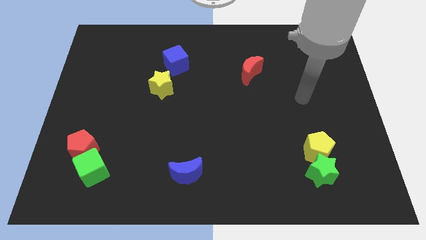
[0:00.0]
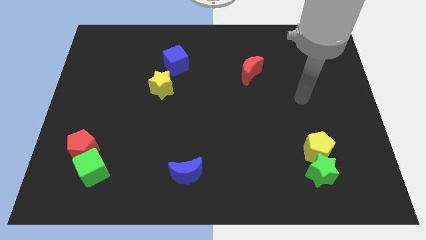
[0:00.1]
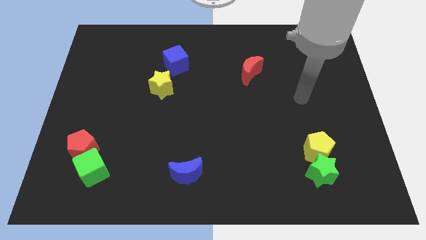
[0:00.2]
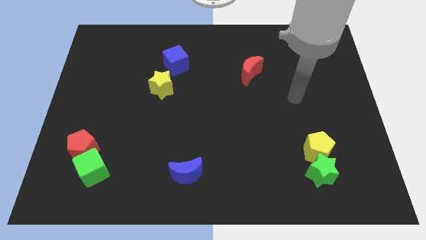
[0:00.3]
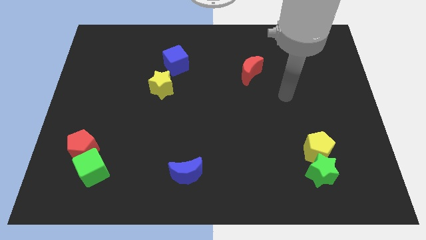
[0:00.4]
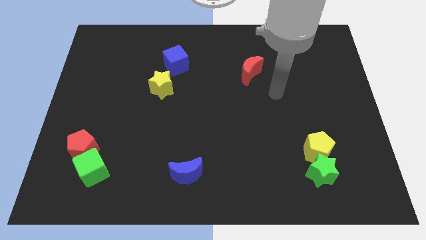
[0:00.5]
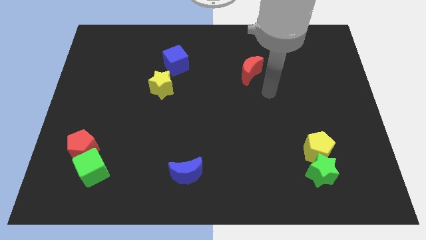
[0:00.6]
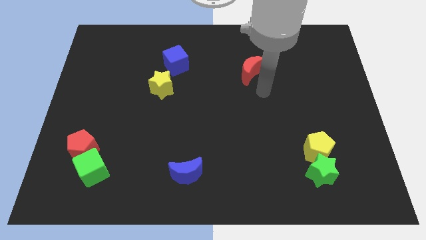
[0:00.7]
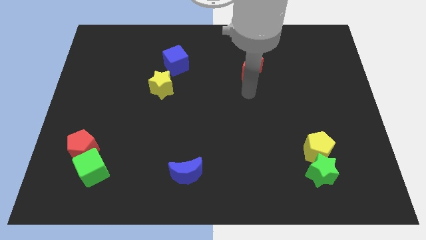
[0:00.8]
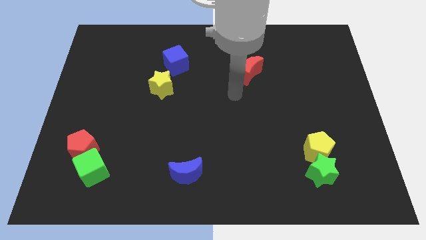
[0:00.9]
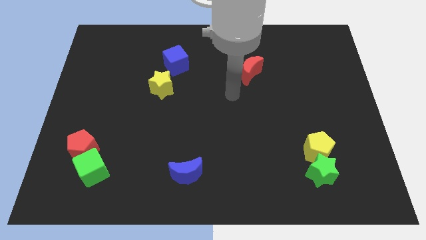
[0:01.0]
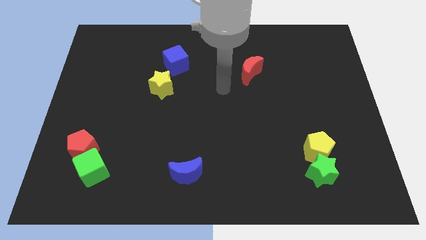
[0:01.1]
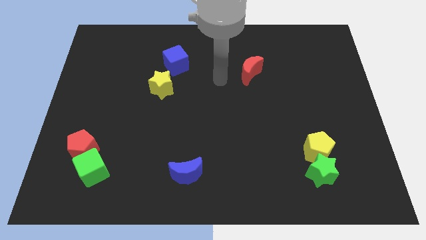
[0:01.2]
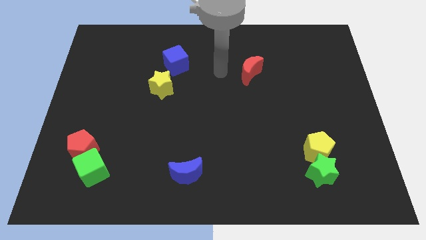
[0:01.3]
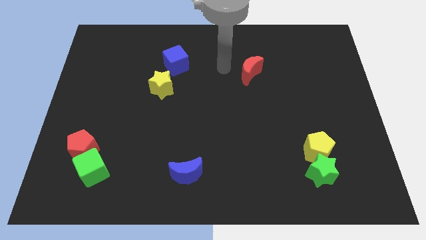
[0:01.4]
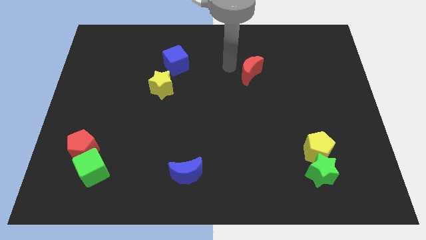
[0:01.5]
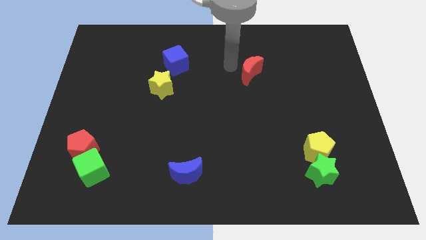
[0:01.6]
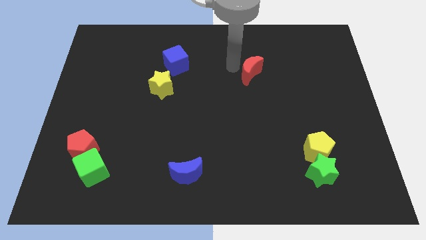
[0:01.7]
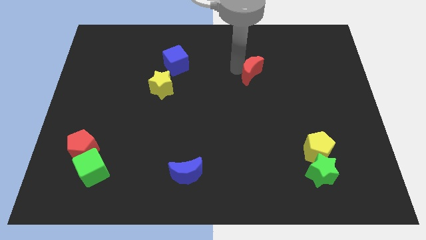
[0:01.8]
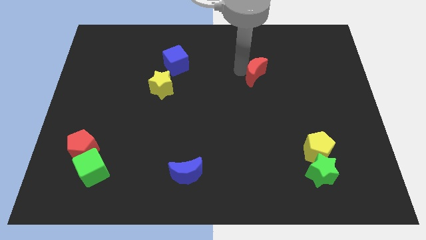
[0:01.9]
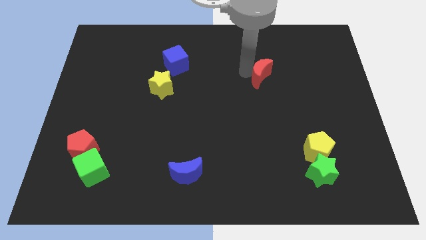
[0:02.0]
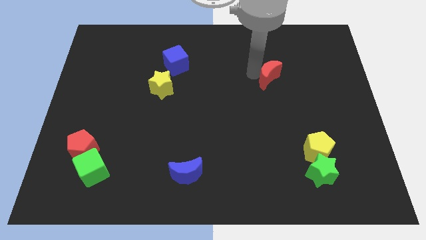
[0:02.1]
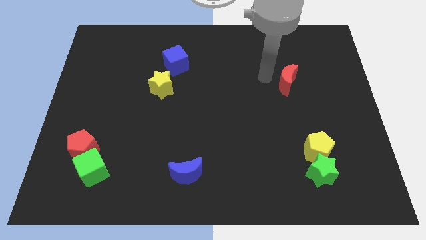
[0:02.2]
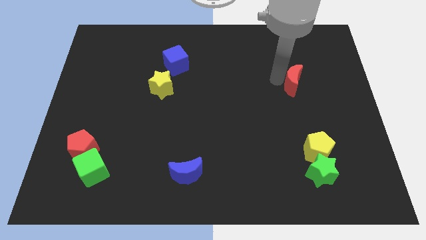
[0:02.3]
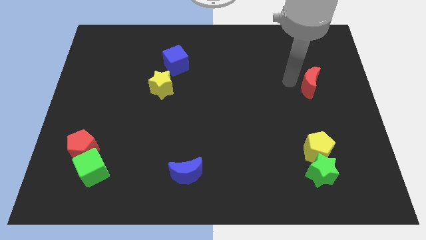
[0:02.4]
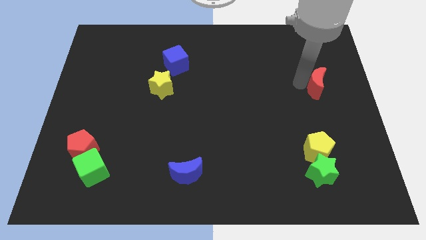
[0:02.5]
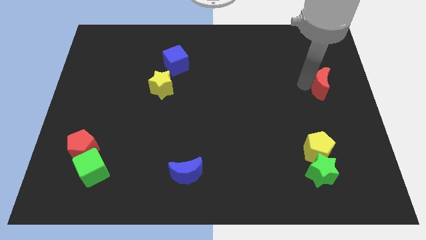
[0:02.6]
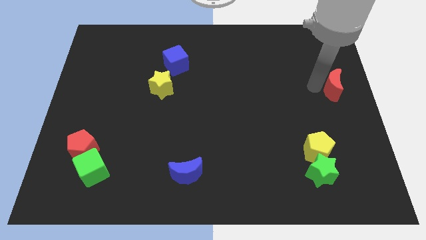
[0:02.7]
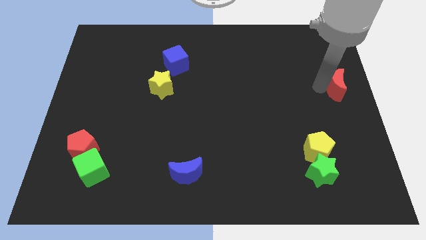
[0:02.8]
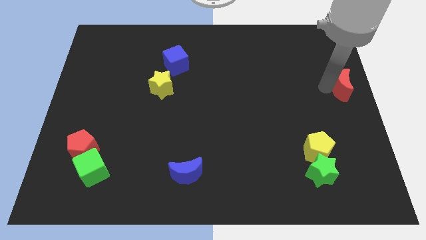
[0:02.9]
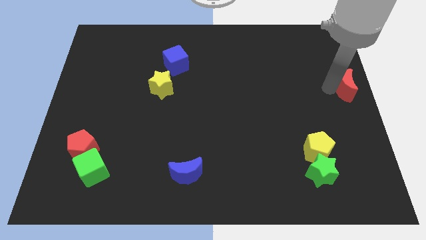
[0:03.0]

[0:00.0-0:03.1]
move red moon to the center right of the board

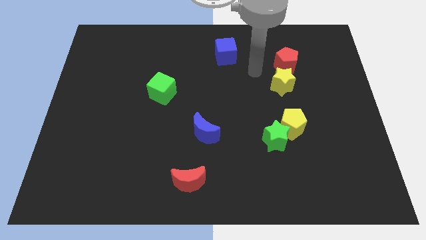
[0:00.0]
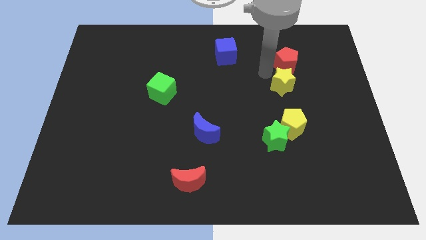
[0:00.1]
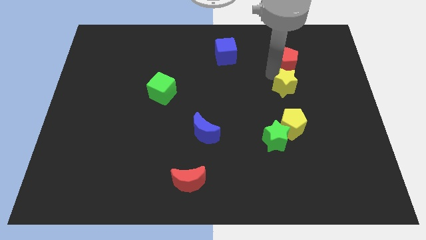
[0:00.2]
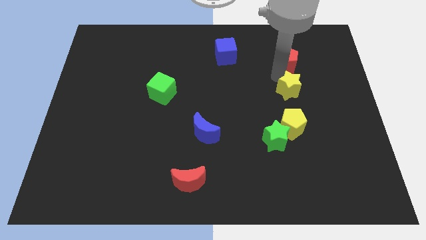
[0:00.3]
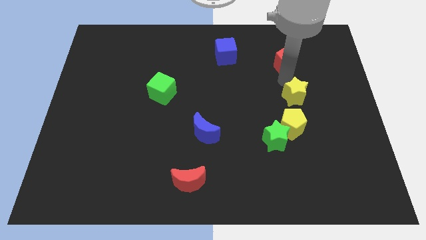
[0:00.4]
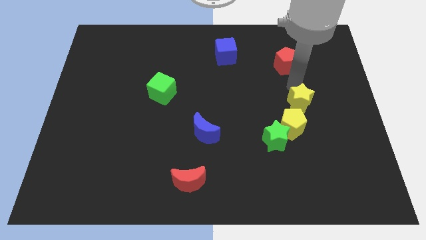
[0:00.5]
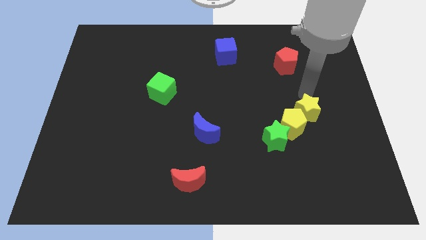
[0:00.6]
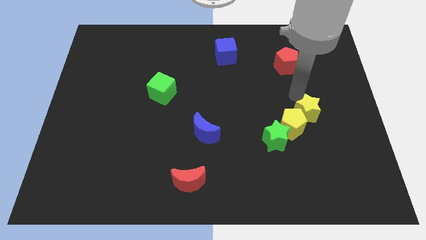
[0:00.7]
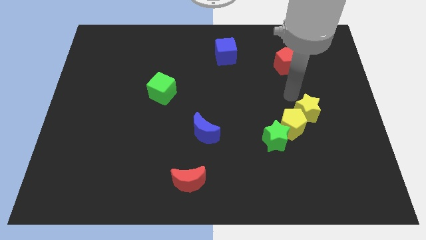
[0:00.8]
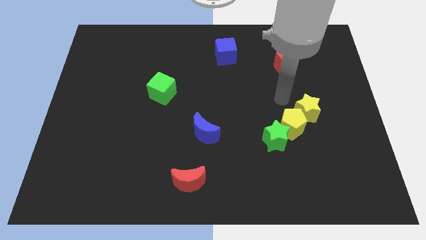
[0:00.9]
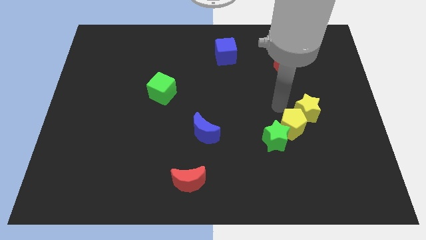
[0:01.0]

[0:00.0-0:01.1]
slide yellow star into yellow pentagon

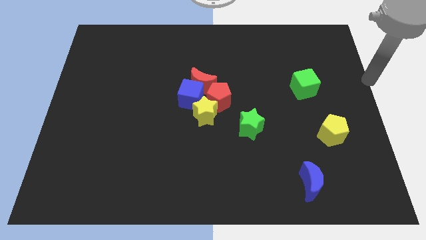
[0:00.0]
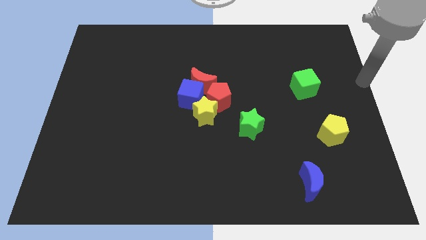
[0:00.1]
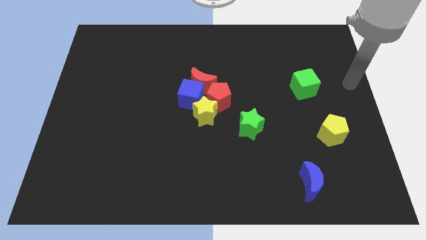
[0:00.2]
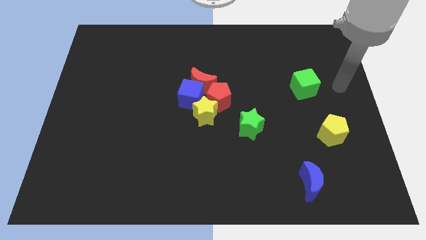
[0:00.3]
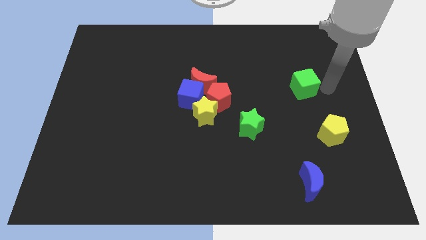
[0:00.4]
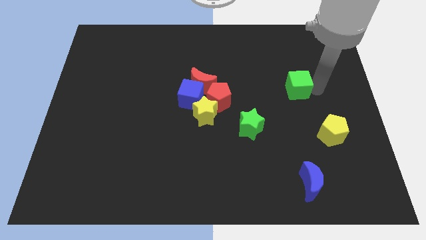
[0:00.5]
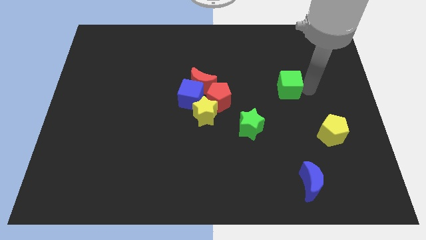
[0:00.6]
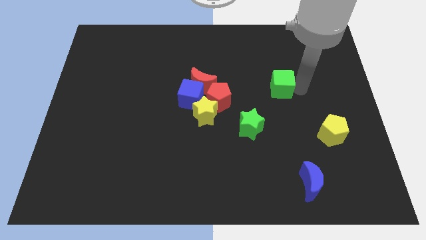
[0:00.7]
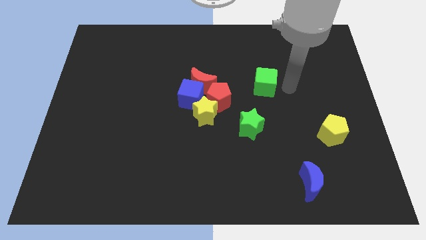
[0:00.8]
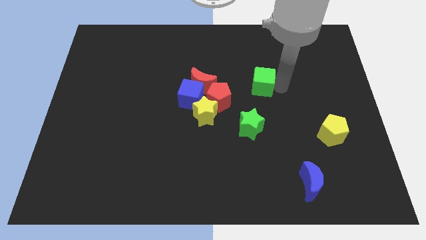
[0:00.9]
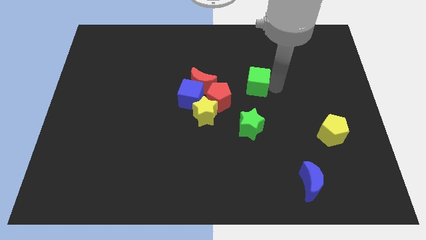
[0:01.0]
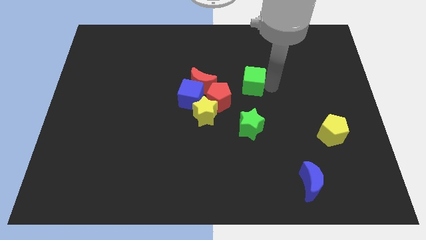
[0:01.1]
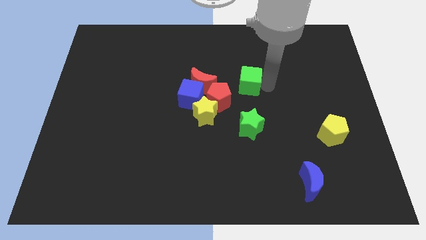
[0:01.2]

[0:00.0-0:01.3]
push the green cube to the top of the green star

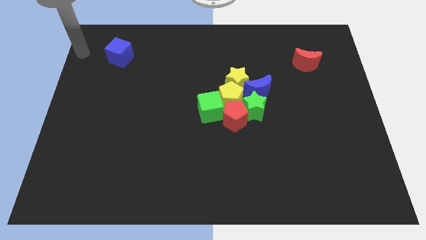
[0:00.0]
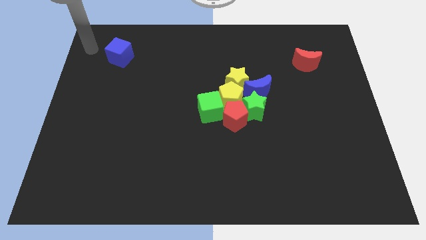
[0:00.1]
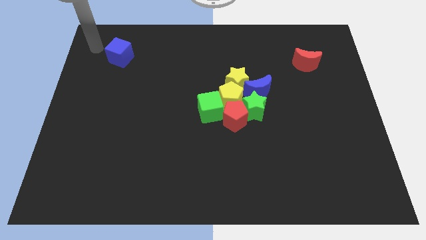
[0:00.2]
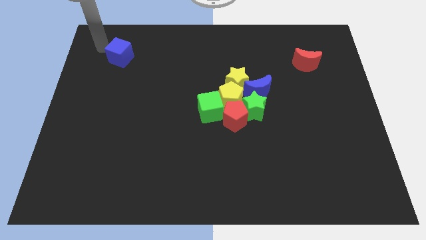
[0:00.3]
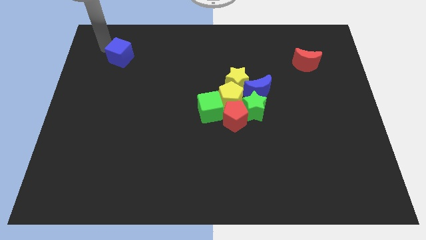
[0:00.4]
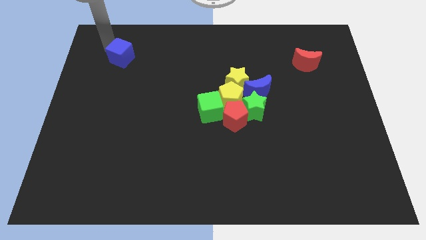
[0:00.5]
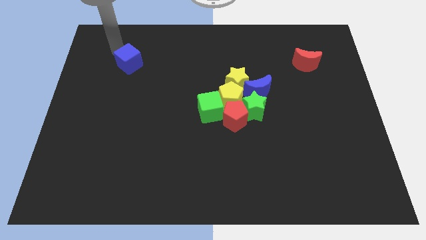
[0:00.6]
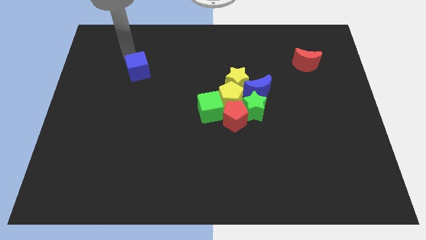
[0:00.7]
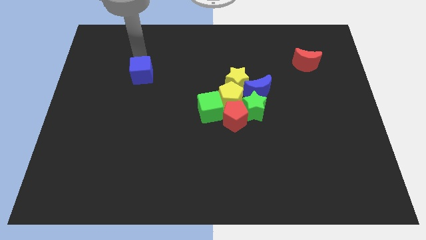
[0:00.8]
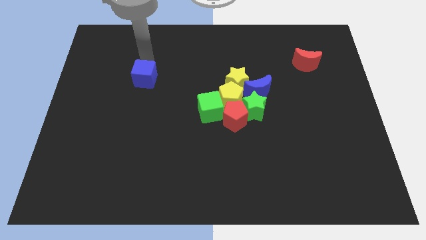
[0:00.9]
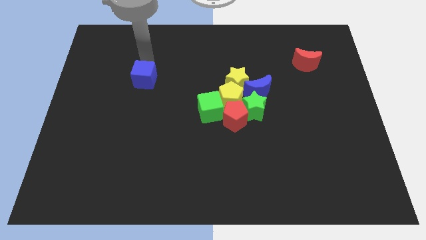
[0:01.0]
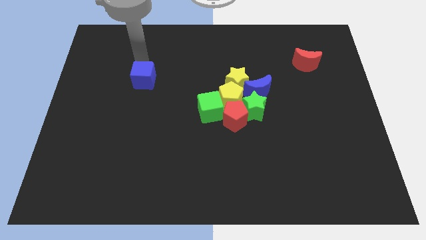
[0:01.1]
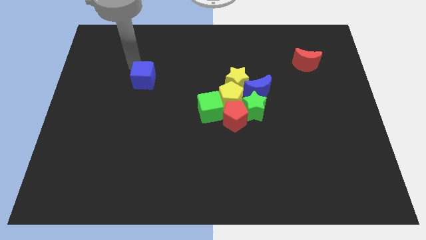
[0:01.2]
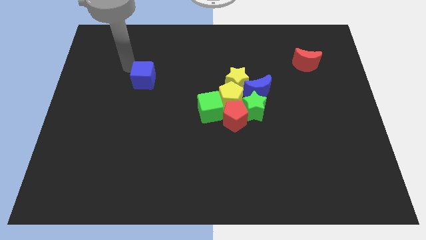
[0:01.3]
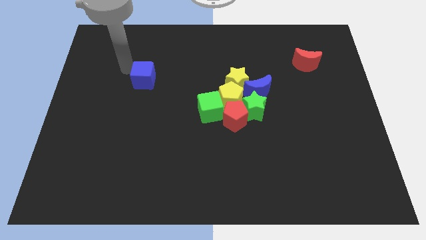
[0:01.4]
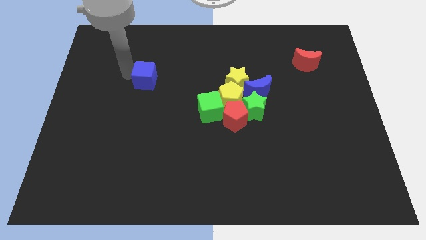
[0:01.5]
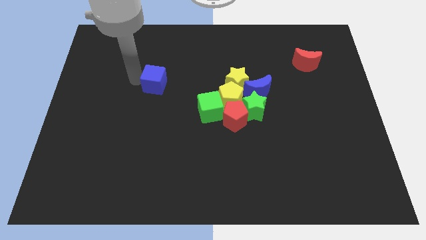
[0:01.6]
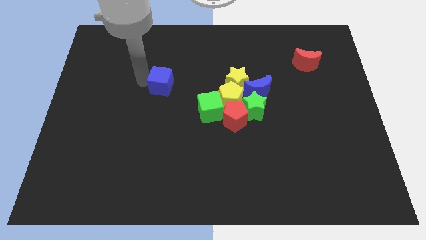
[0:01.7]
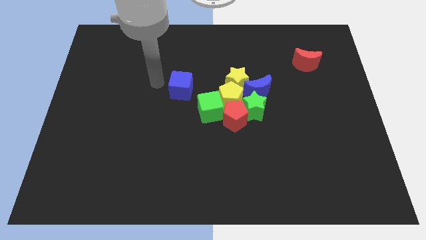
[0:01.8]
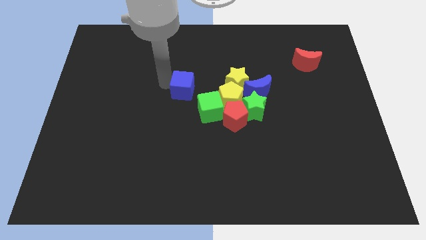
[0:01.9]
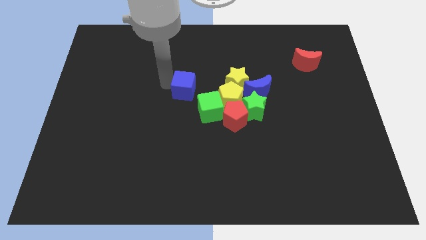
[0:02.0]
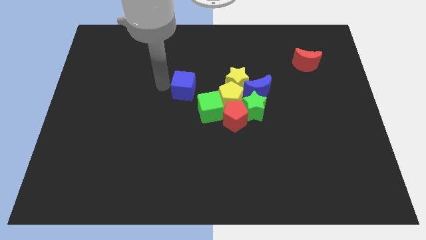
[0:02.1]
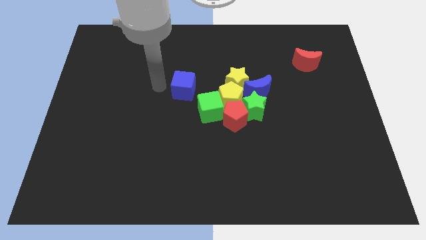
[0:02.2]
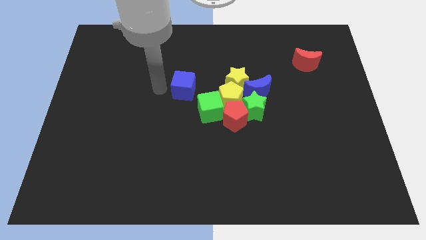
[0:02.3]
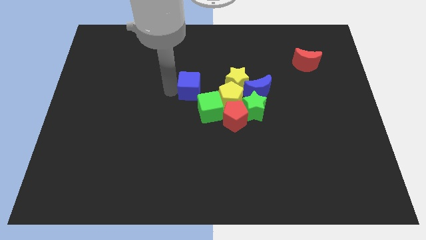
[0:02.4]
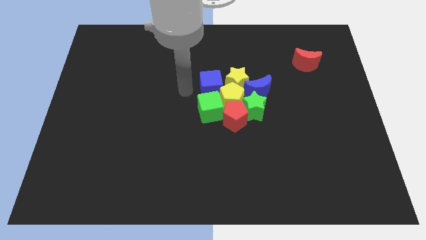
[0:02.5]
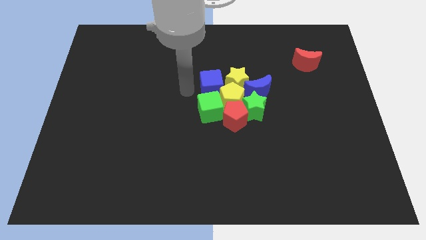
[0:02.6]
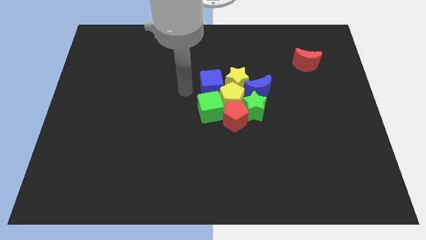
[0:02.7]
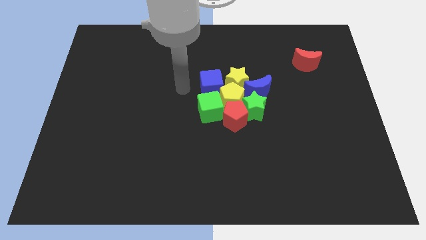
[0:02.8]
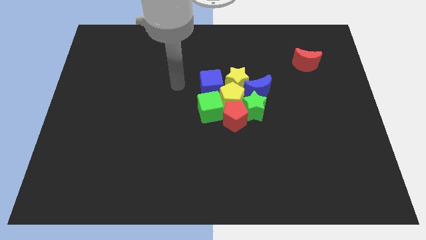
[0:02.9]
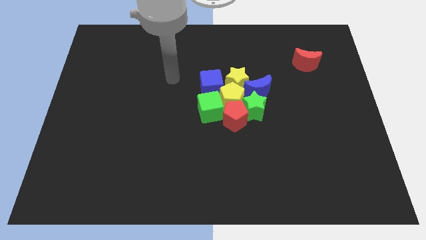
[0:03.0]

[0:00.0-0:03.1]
push the blue cube into yellow pentagon

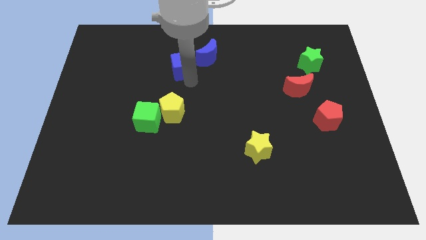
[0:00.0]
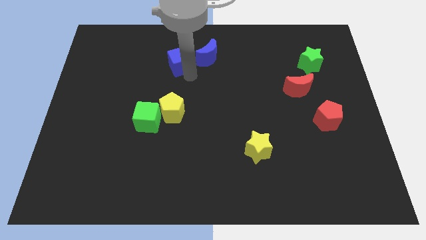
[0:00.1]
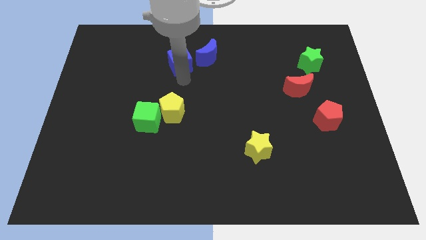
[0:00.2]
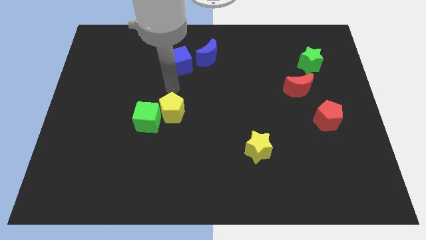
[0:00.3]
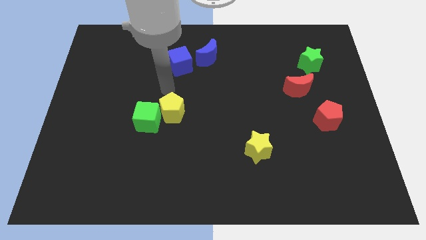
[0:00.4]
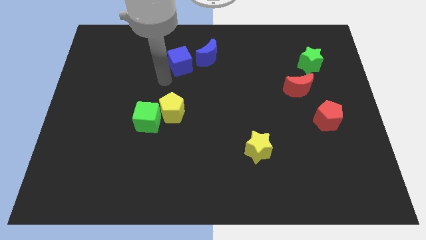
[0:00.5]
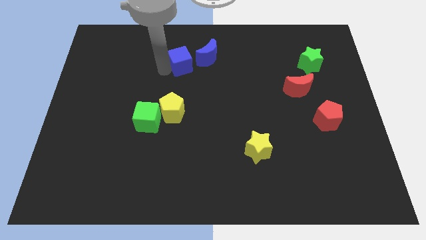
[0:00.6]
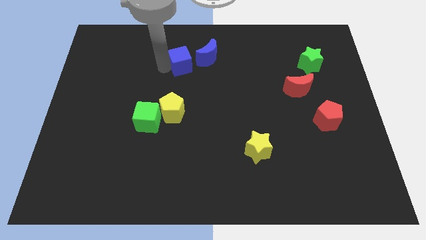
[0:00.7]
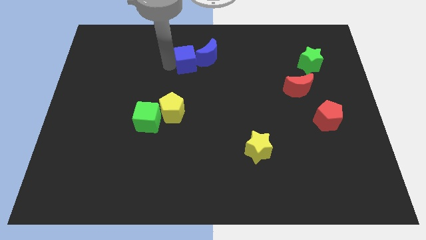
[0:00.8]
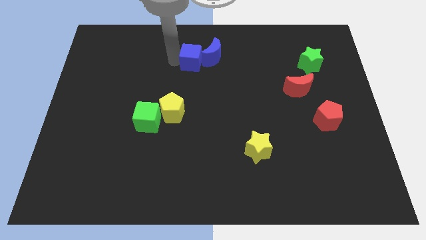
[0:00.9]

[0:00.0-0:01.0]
push the blue cube to the left of the blue crescent
